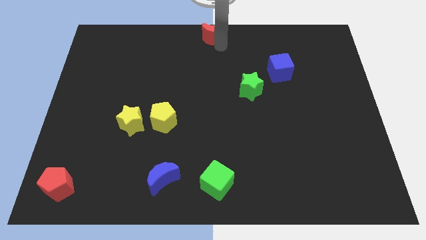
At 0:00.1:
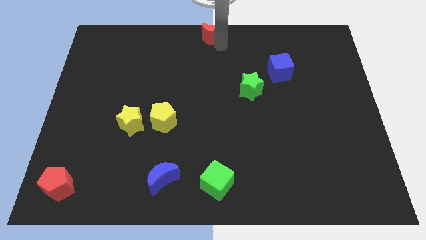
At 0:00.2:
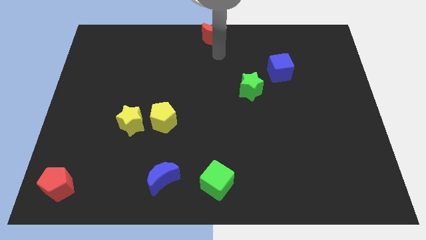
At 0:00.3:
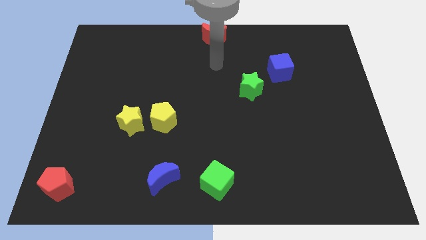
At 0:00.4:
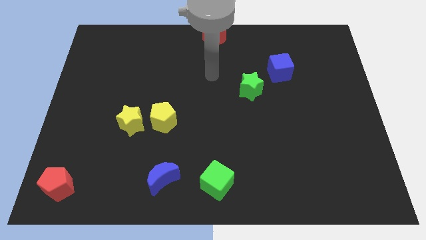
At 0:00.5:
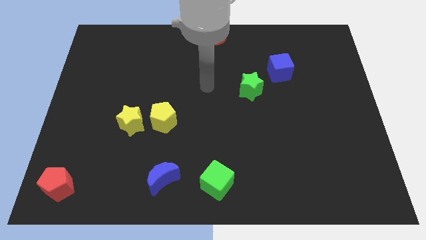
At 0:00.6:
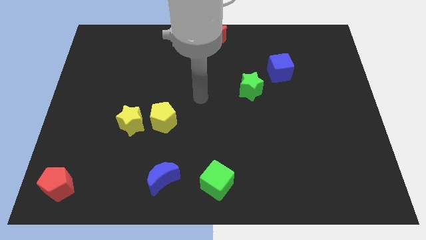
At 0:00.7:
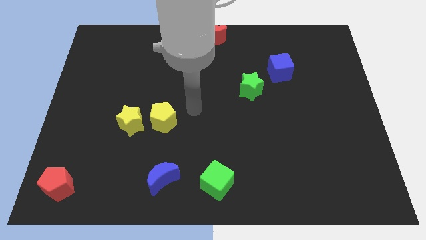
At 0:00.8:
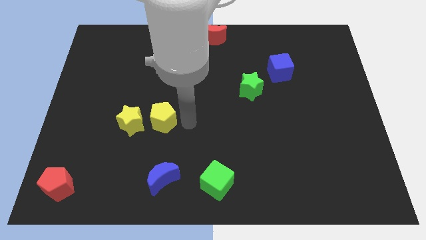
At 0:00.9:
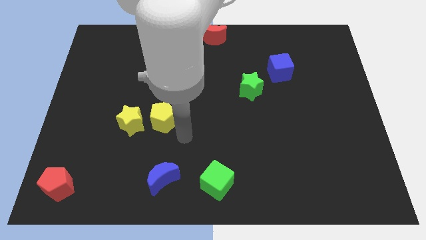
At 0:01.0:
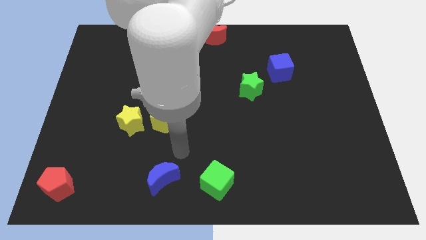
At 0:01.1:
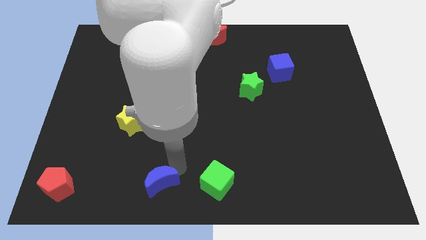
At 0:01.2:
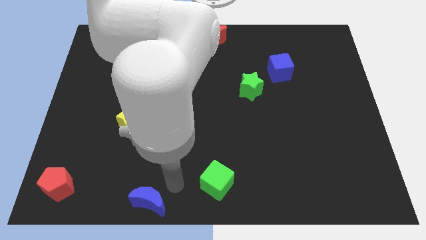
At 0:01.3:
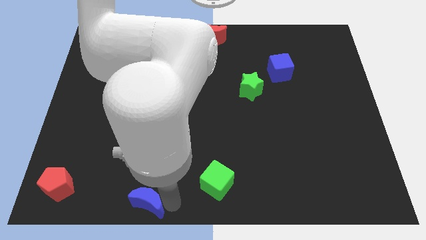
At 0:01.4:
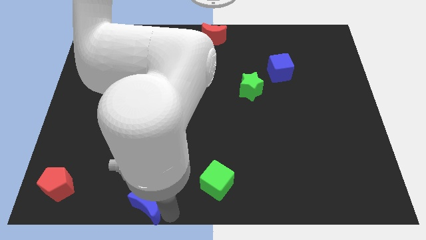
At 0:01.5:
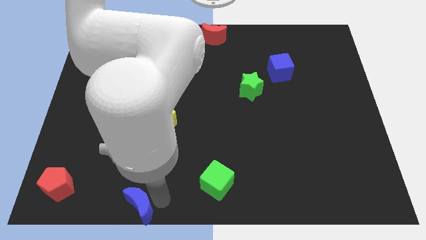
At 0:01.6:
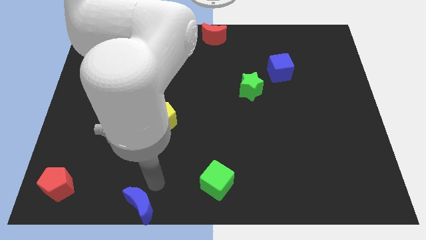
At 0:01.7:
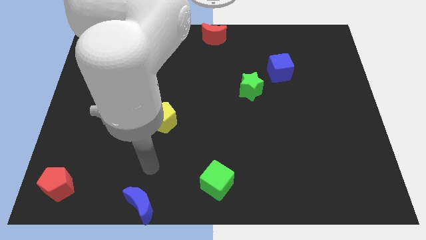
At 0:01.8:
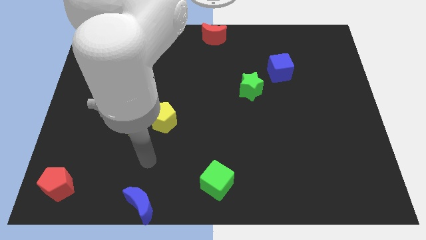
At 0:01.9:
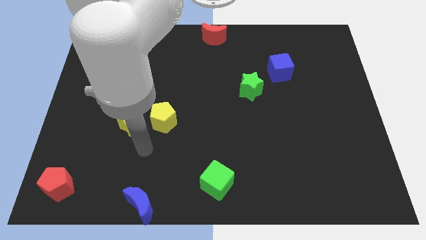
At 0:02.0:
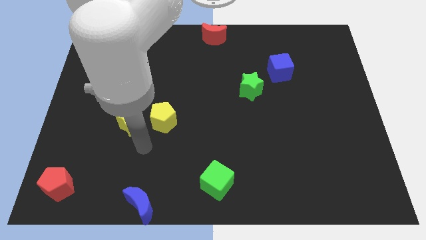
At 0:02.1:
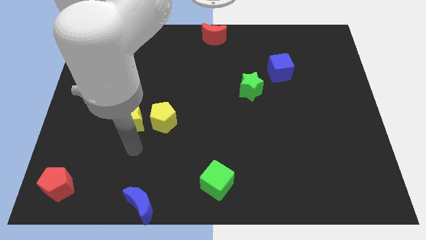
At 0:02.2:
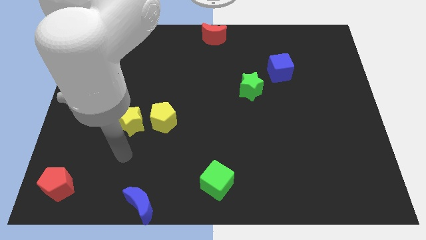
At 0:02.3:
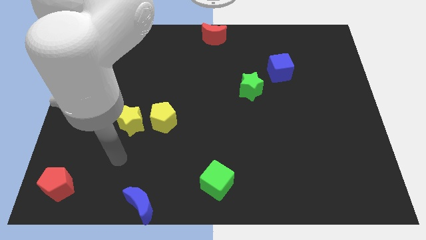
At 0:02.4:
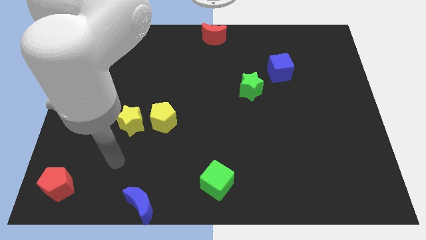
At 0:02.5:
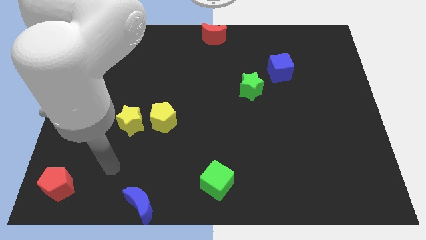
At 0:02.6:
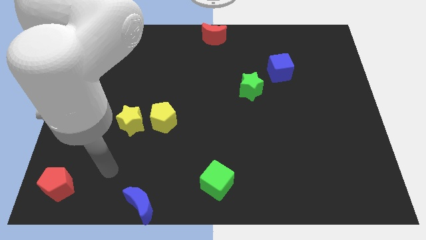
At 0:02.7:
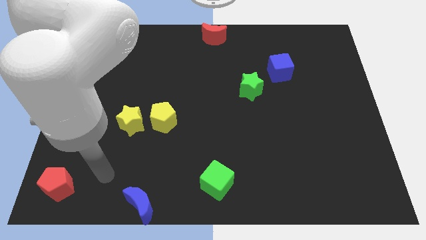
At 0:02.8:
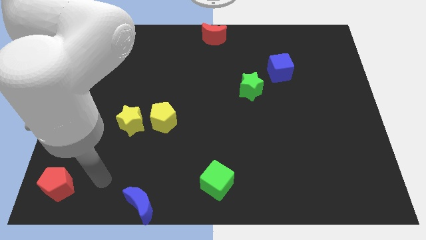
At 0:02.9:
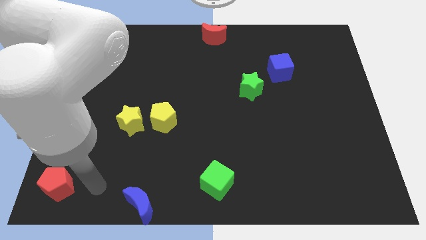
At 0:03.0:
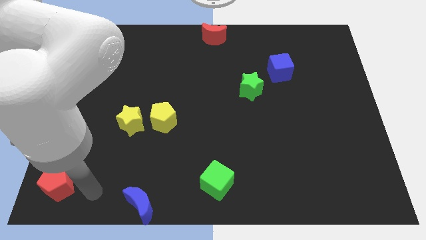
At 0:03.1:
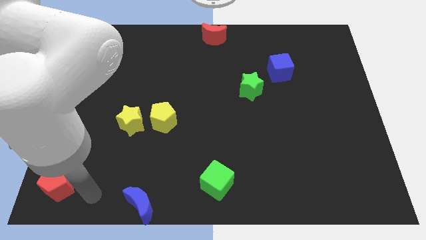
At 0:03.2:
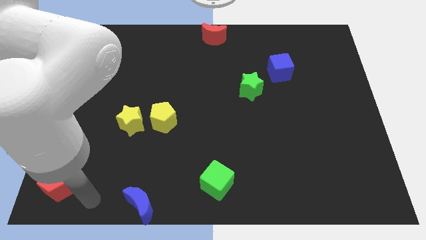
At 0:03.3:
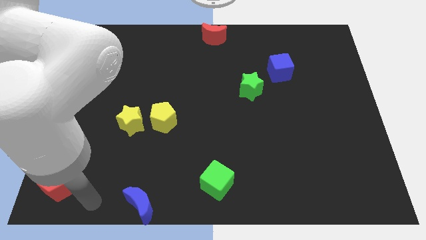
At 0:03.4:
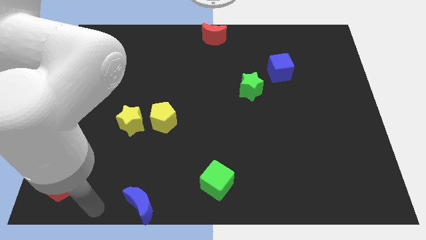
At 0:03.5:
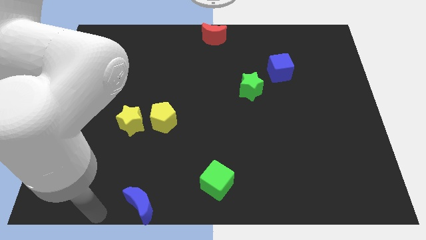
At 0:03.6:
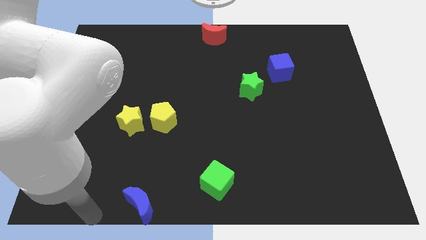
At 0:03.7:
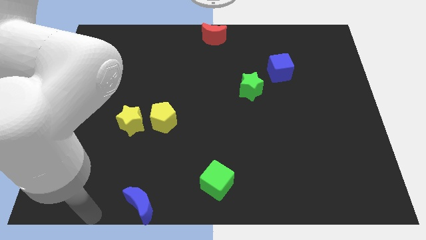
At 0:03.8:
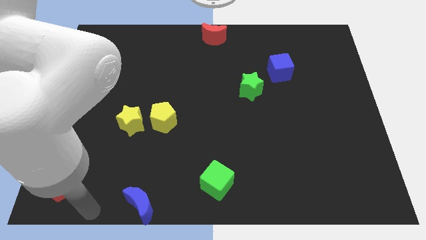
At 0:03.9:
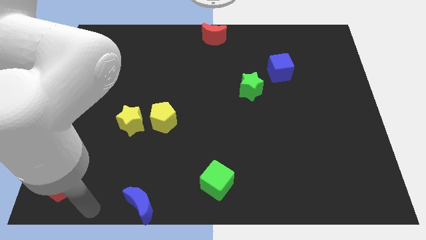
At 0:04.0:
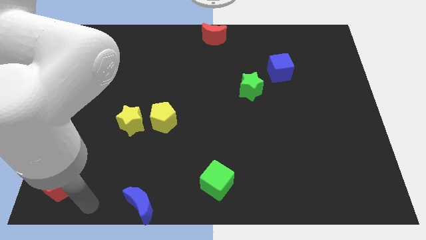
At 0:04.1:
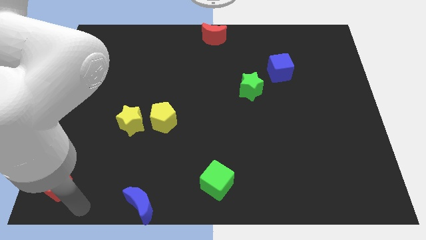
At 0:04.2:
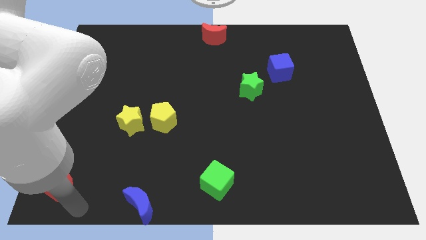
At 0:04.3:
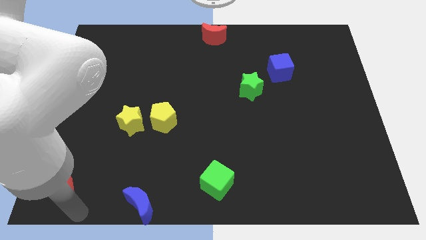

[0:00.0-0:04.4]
push the blue moon downwards to the left side

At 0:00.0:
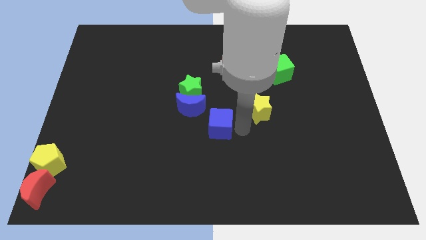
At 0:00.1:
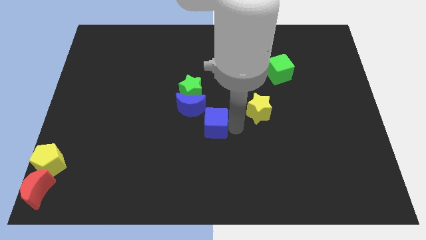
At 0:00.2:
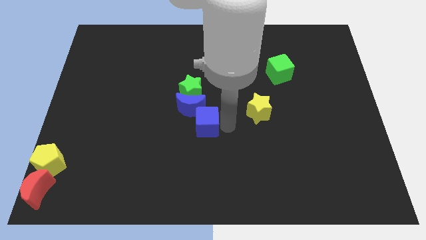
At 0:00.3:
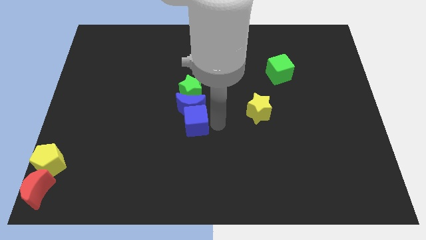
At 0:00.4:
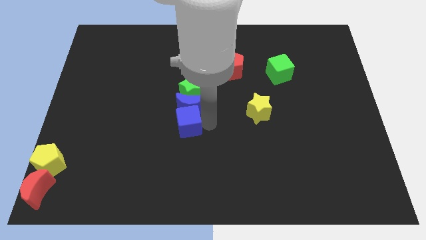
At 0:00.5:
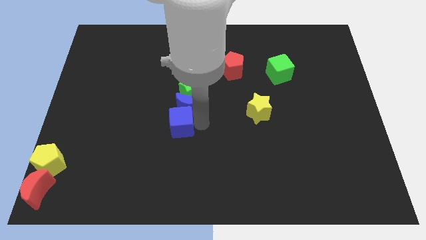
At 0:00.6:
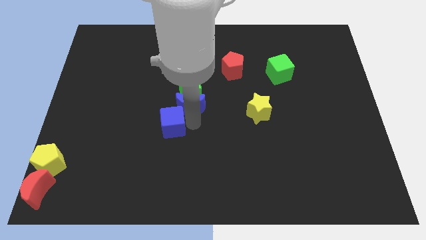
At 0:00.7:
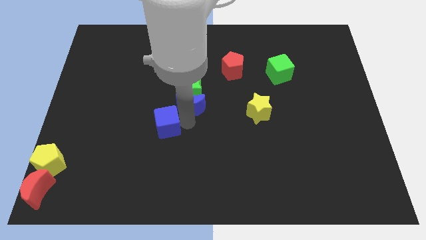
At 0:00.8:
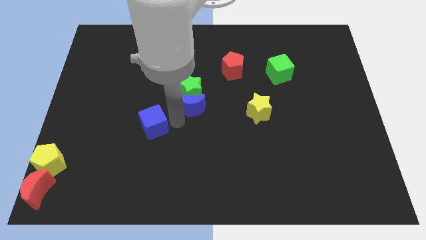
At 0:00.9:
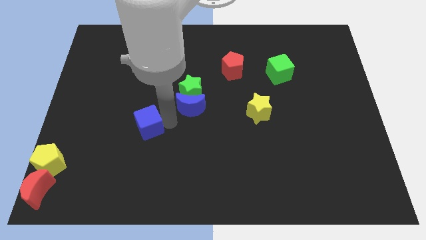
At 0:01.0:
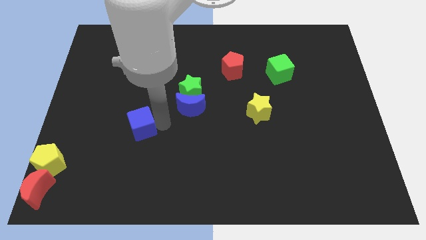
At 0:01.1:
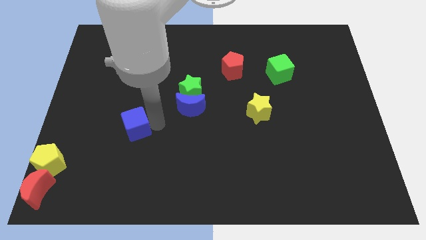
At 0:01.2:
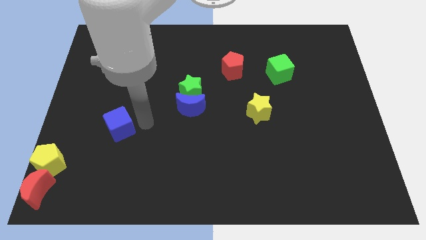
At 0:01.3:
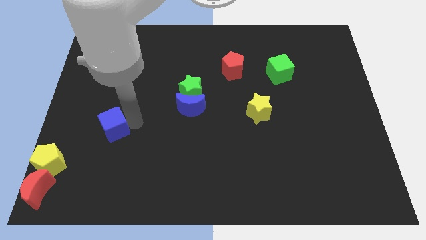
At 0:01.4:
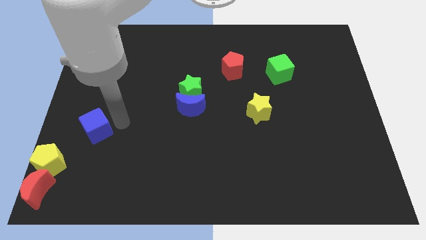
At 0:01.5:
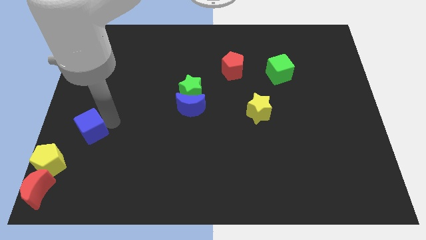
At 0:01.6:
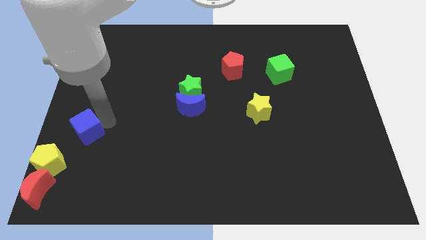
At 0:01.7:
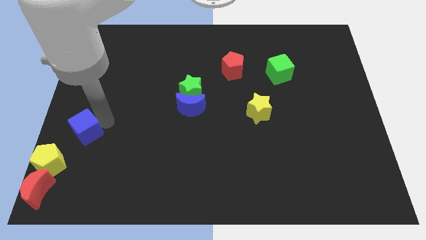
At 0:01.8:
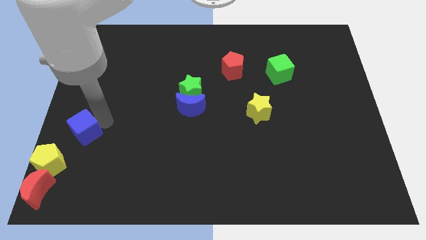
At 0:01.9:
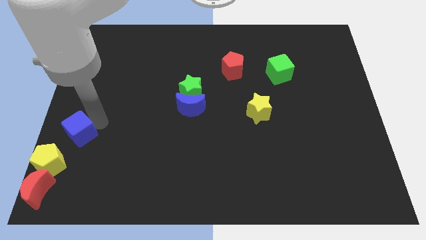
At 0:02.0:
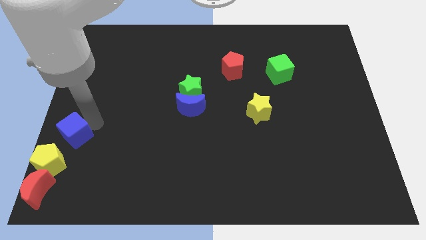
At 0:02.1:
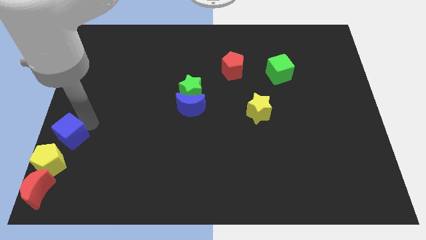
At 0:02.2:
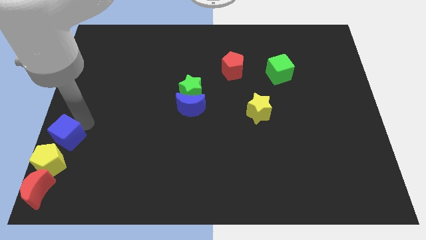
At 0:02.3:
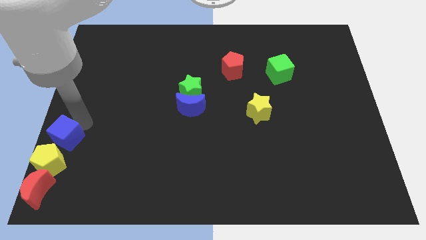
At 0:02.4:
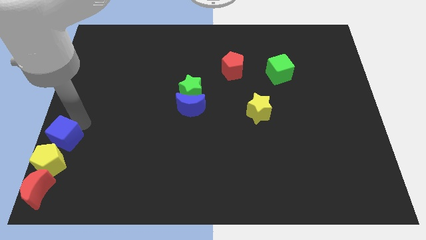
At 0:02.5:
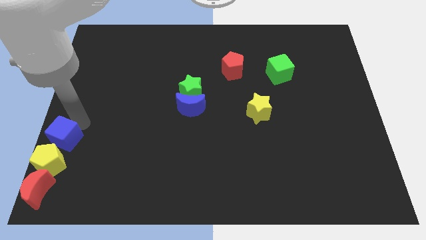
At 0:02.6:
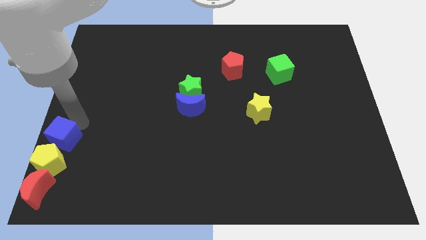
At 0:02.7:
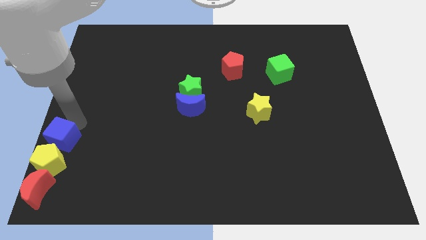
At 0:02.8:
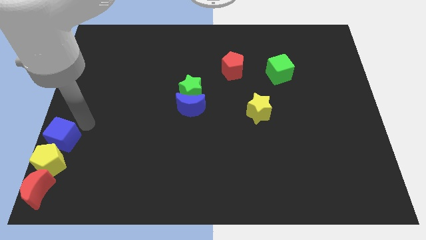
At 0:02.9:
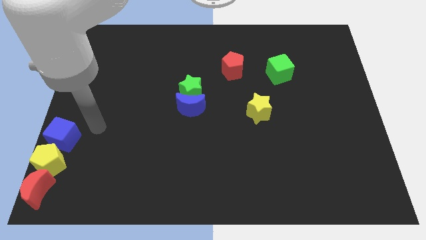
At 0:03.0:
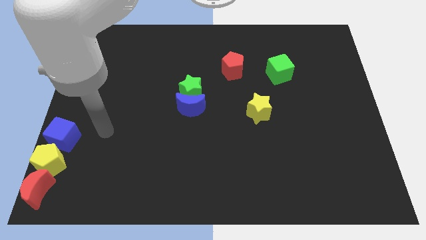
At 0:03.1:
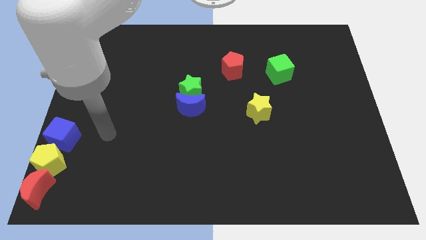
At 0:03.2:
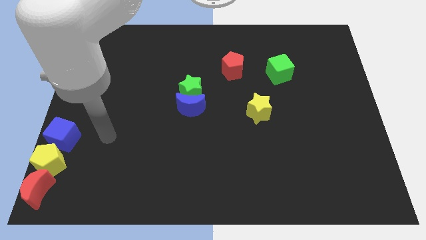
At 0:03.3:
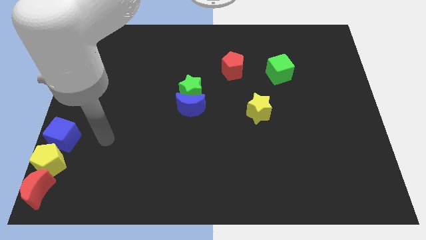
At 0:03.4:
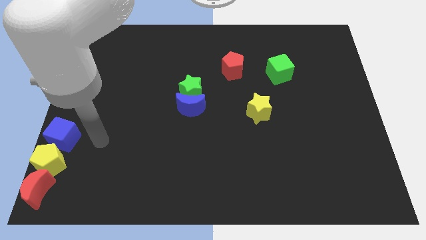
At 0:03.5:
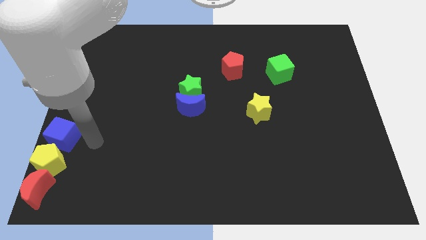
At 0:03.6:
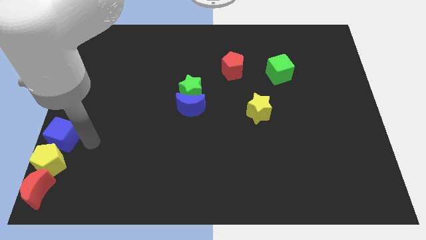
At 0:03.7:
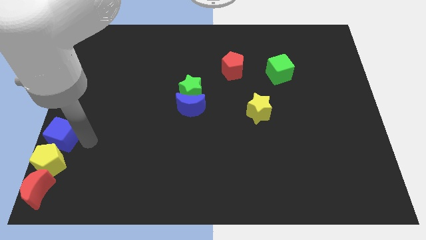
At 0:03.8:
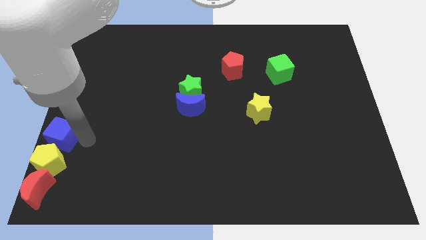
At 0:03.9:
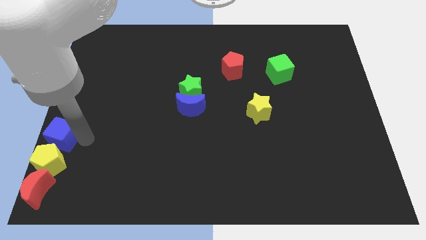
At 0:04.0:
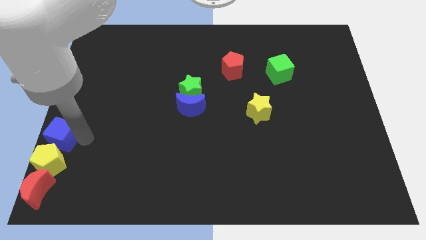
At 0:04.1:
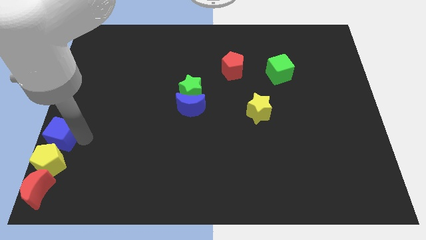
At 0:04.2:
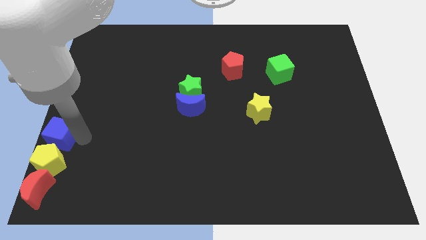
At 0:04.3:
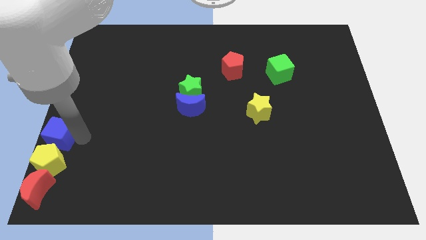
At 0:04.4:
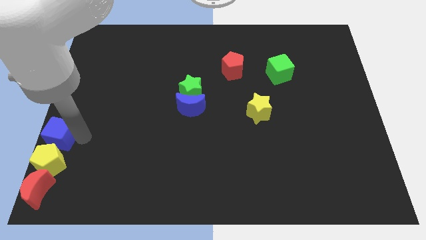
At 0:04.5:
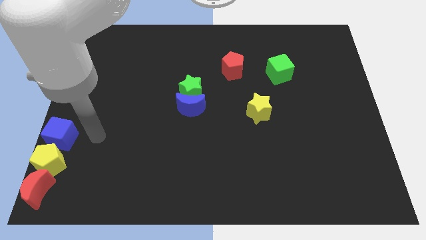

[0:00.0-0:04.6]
place the blue cube above to the yellow pentagon
